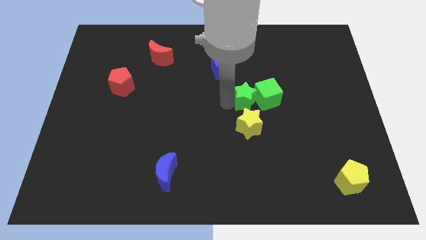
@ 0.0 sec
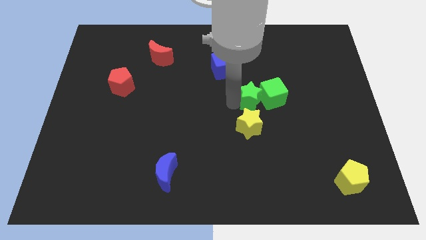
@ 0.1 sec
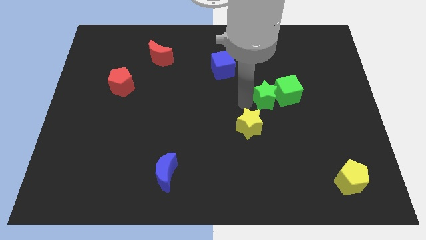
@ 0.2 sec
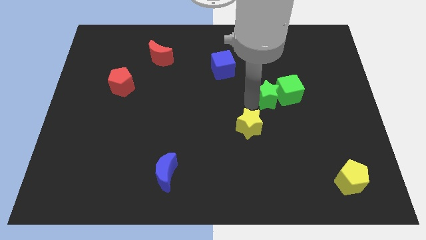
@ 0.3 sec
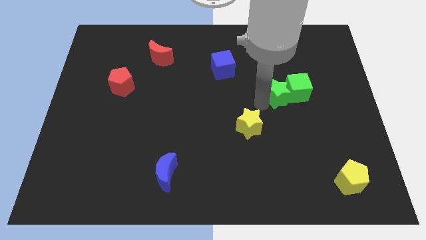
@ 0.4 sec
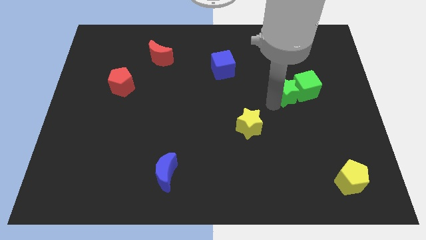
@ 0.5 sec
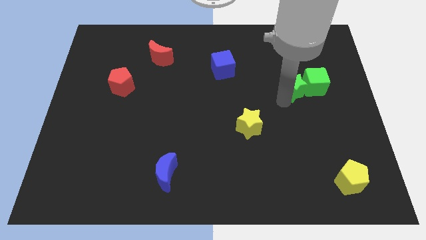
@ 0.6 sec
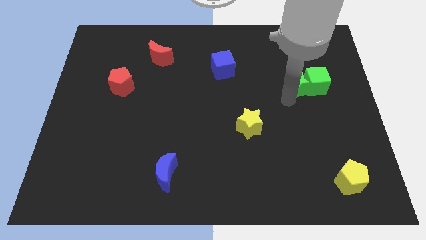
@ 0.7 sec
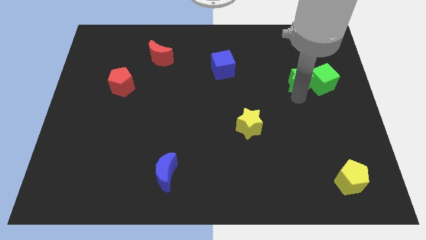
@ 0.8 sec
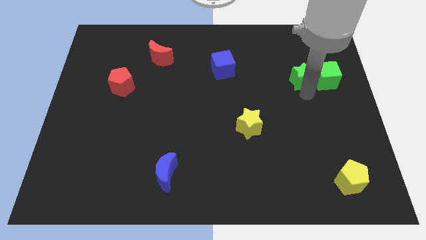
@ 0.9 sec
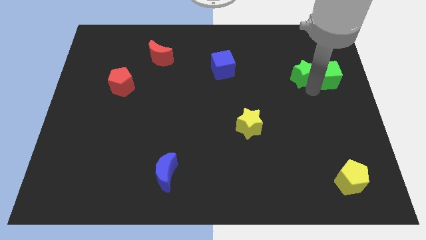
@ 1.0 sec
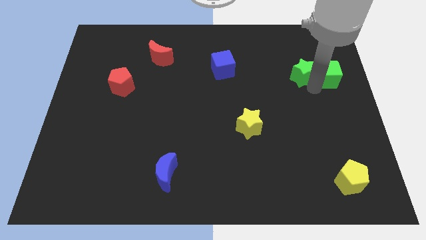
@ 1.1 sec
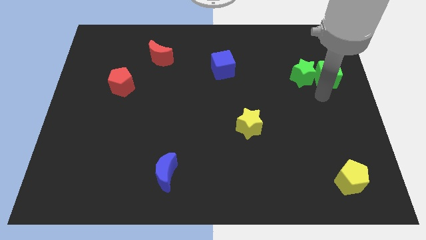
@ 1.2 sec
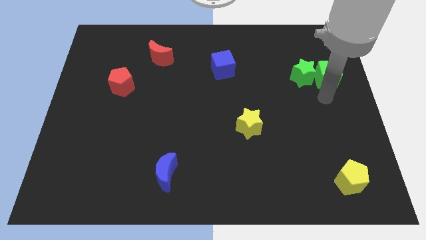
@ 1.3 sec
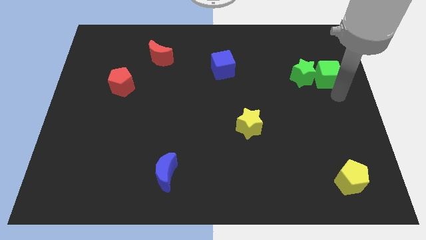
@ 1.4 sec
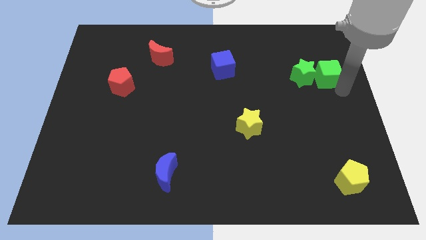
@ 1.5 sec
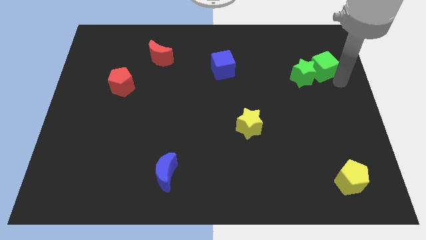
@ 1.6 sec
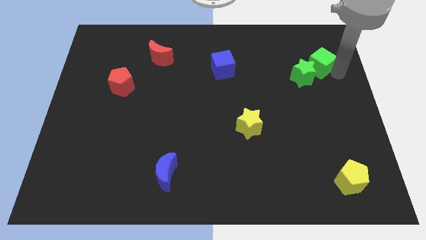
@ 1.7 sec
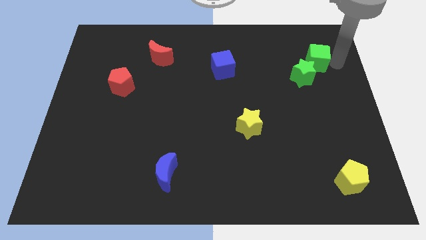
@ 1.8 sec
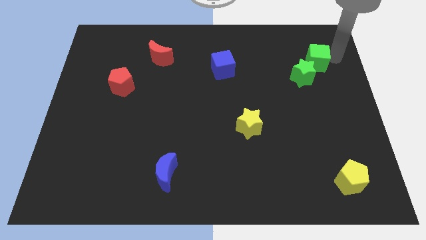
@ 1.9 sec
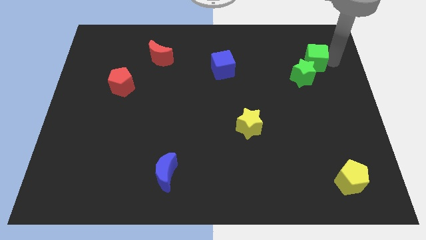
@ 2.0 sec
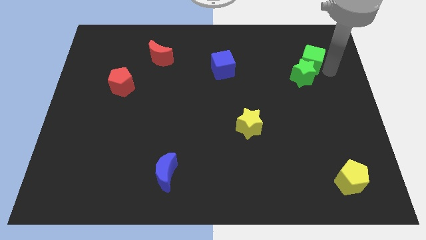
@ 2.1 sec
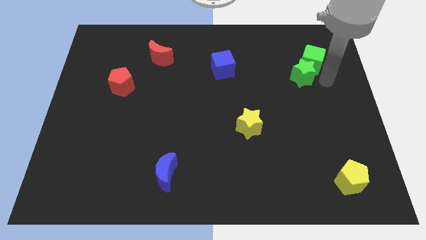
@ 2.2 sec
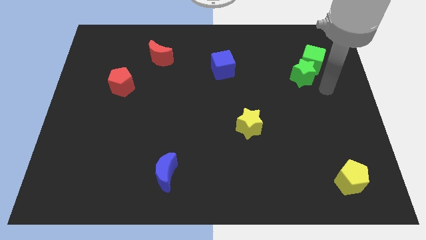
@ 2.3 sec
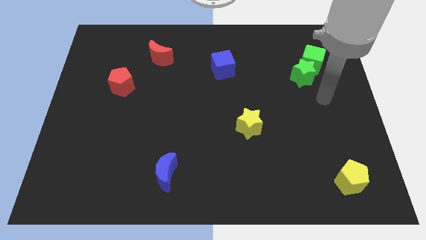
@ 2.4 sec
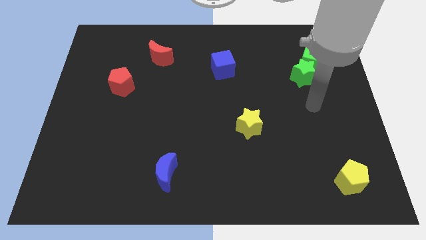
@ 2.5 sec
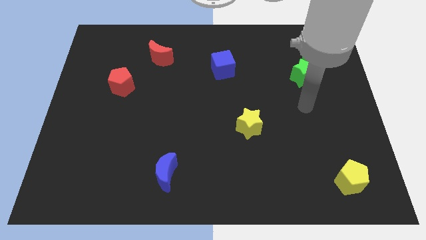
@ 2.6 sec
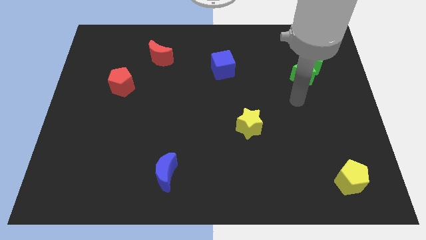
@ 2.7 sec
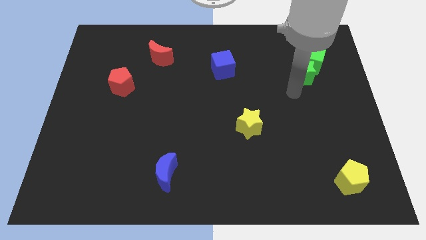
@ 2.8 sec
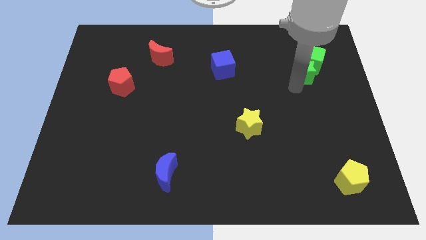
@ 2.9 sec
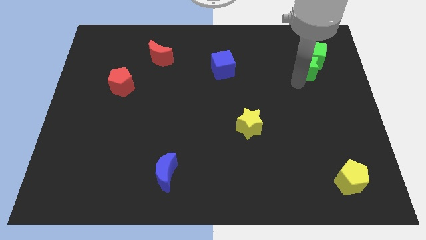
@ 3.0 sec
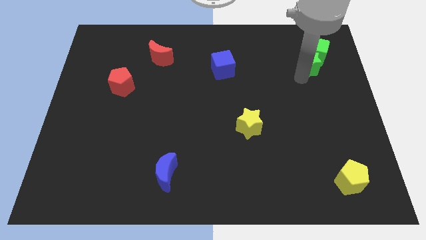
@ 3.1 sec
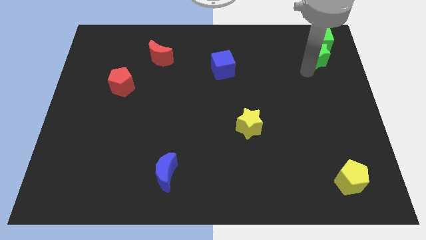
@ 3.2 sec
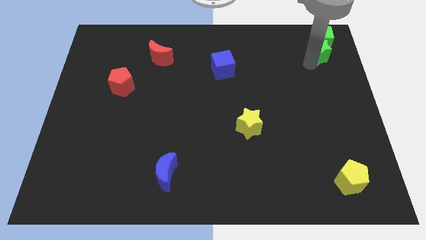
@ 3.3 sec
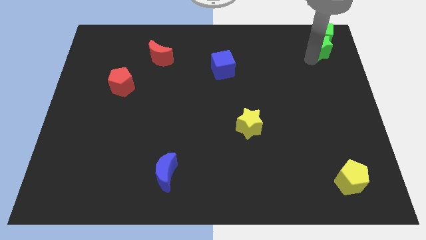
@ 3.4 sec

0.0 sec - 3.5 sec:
push the green star along with green cube to the top right of the board

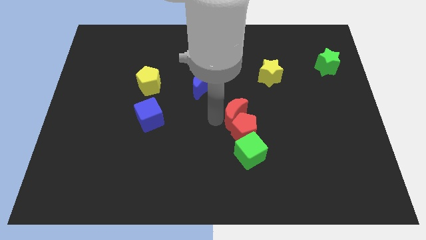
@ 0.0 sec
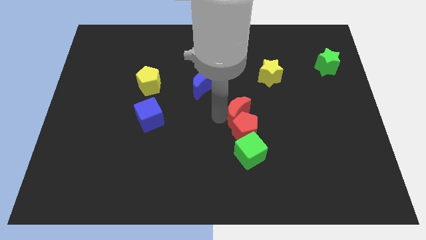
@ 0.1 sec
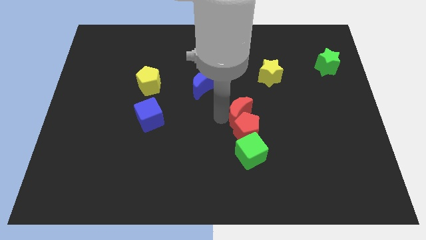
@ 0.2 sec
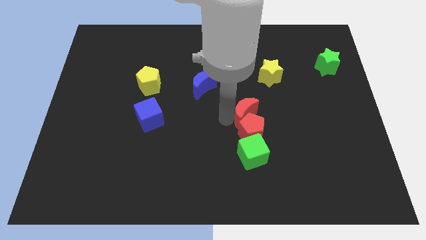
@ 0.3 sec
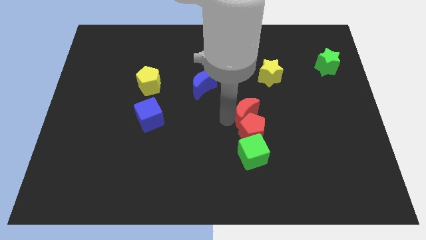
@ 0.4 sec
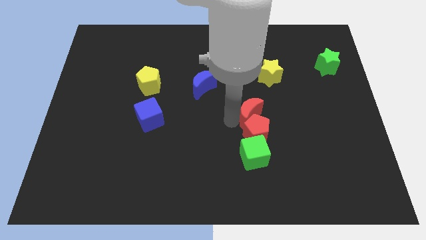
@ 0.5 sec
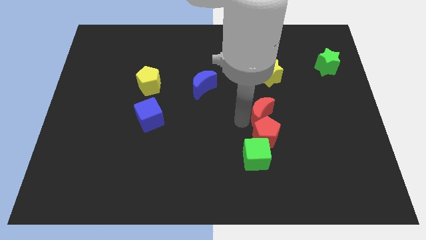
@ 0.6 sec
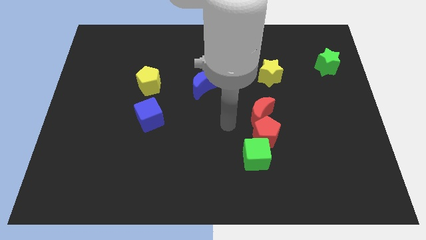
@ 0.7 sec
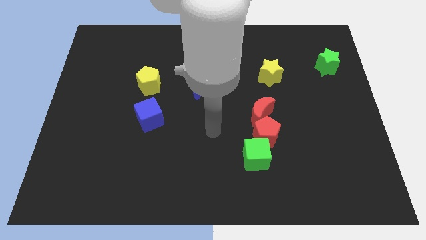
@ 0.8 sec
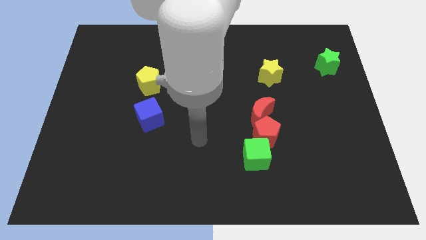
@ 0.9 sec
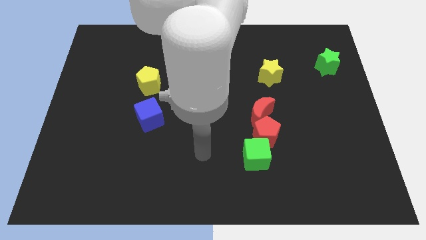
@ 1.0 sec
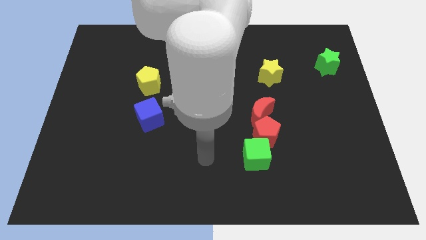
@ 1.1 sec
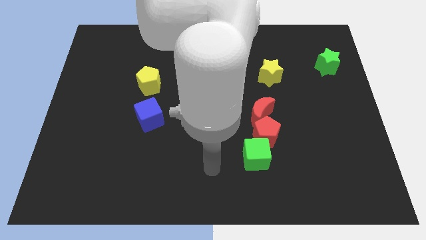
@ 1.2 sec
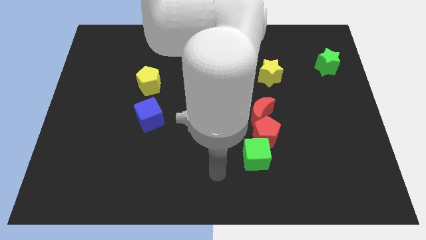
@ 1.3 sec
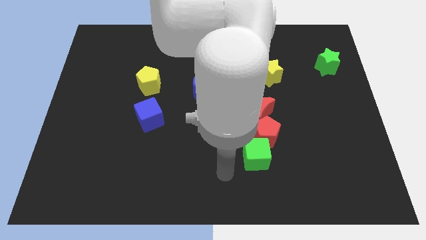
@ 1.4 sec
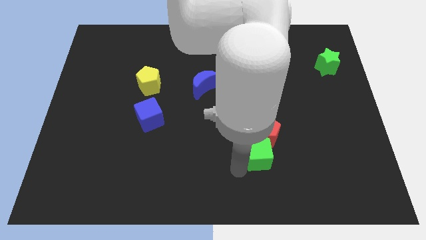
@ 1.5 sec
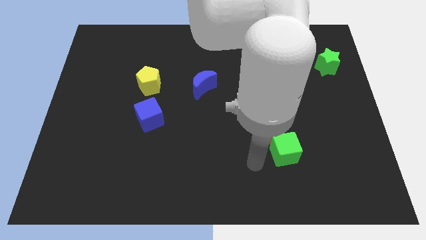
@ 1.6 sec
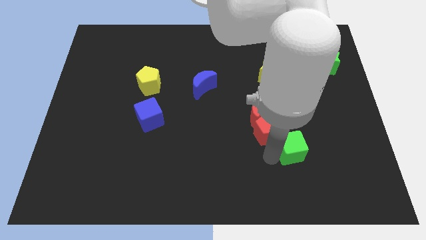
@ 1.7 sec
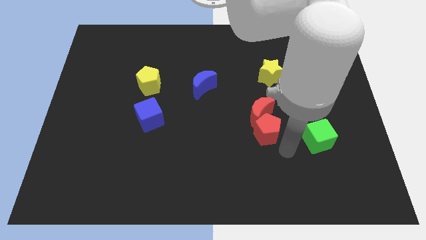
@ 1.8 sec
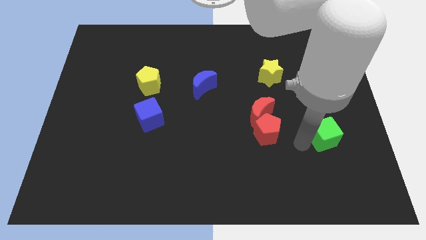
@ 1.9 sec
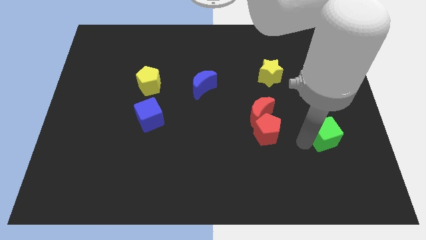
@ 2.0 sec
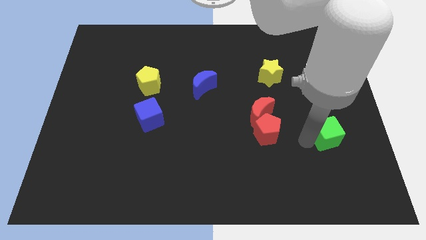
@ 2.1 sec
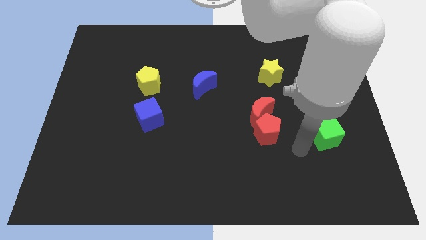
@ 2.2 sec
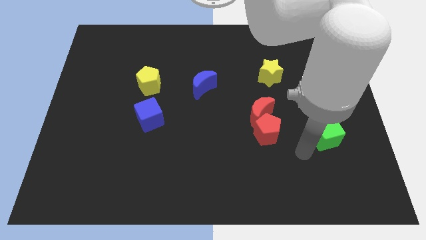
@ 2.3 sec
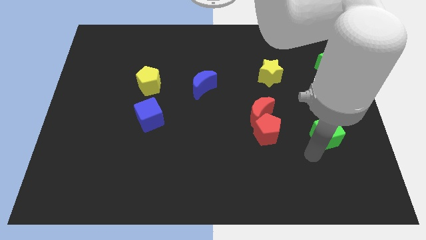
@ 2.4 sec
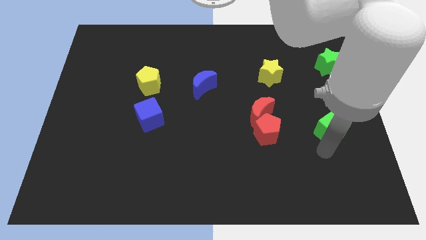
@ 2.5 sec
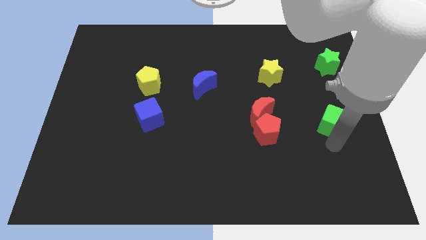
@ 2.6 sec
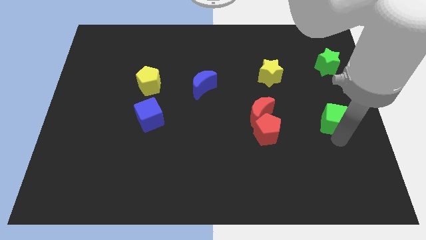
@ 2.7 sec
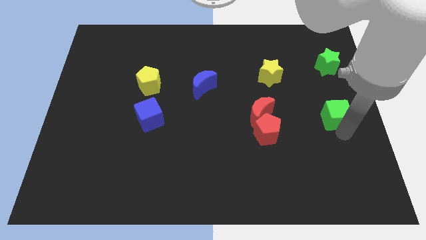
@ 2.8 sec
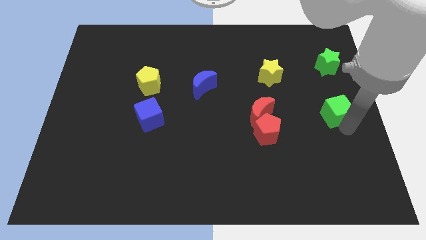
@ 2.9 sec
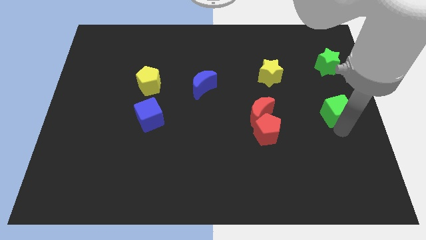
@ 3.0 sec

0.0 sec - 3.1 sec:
move the green cube below the green star

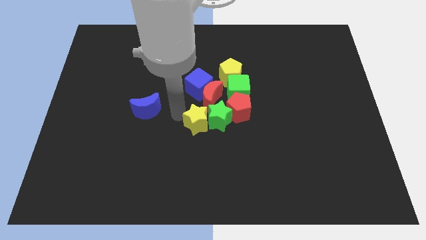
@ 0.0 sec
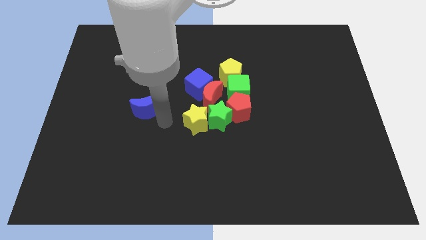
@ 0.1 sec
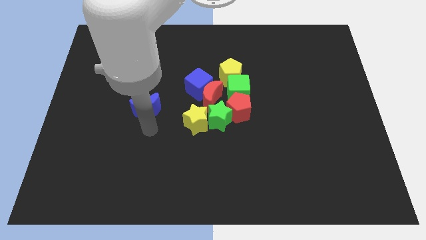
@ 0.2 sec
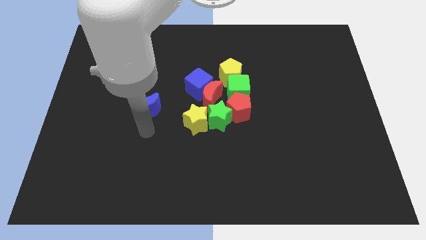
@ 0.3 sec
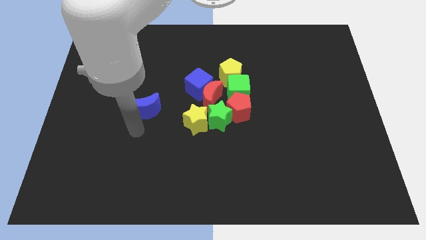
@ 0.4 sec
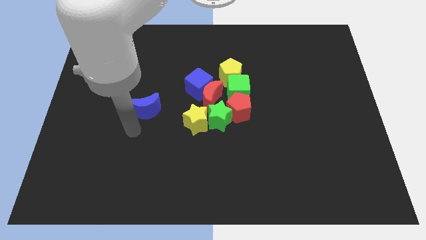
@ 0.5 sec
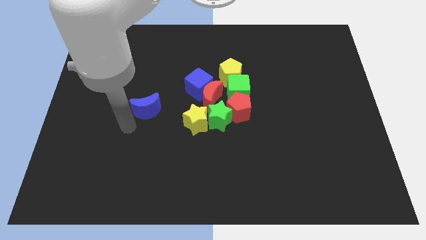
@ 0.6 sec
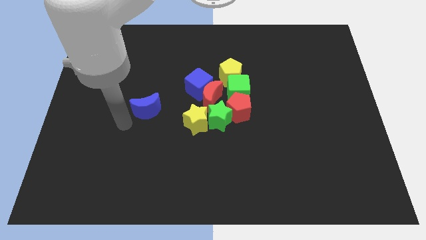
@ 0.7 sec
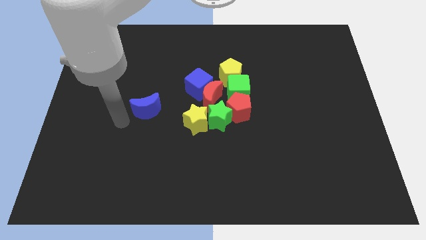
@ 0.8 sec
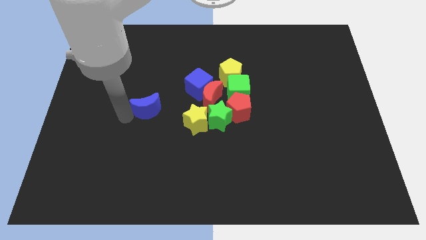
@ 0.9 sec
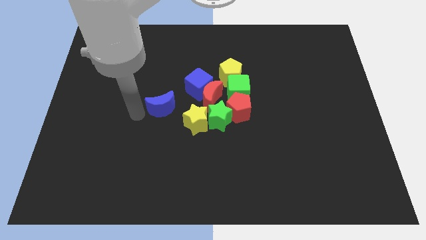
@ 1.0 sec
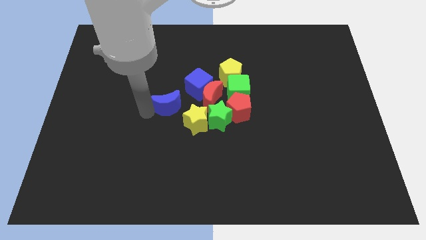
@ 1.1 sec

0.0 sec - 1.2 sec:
go near blue moon

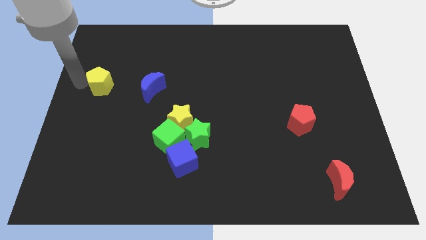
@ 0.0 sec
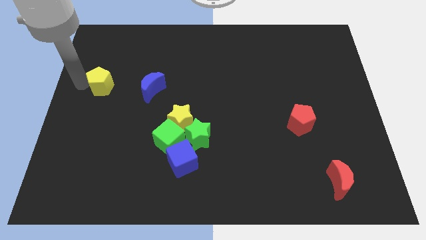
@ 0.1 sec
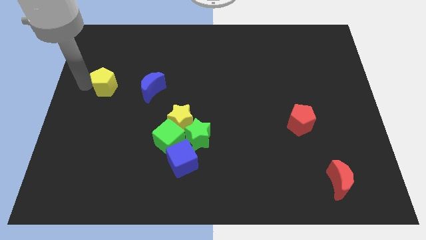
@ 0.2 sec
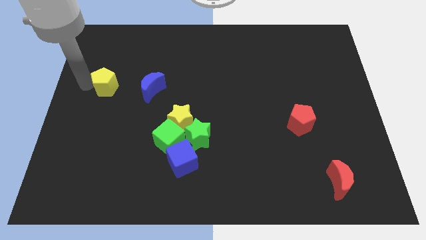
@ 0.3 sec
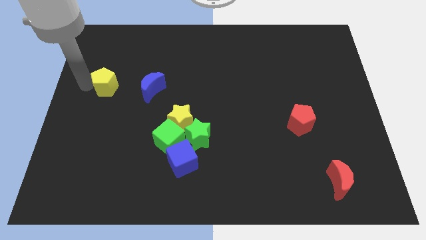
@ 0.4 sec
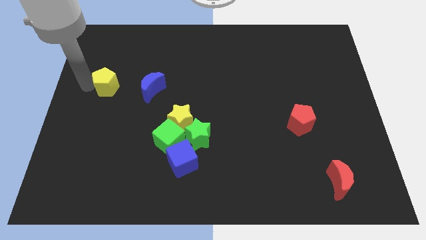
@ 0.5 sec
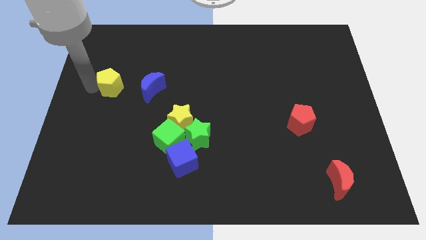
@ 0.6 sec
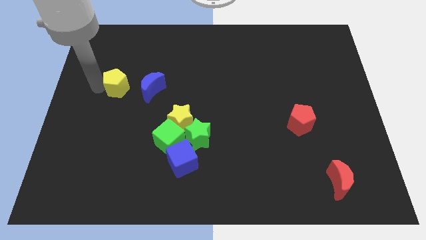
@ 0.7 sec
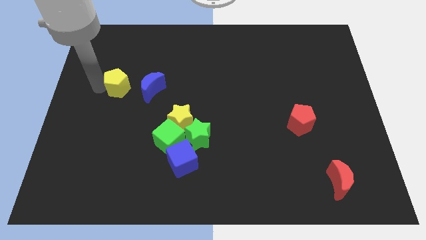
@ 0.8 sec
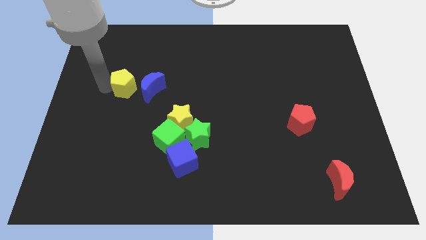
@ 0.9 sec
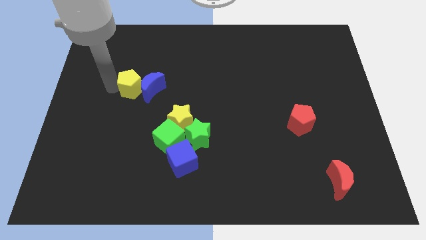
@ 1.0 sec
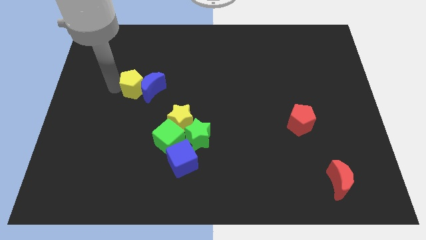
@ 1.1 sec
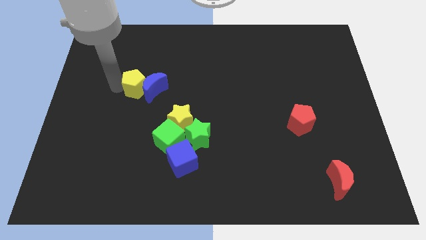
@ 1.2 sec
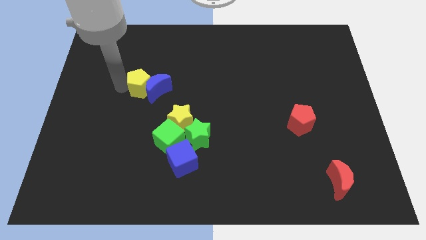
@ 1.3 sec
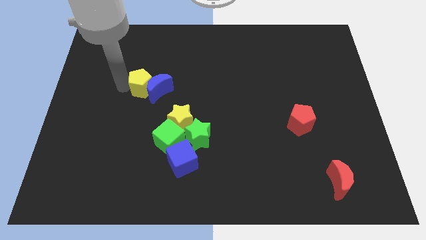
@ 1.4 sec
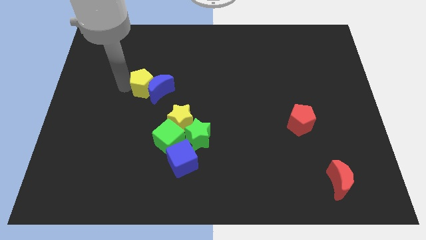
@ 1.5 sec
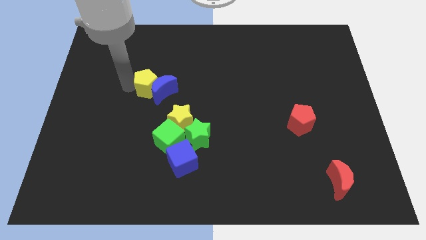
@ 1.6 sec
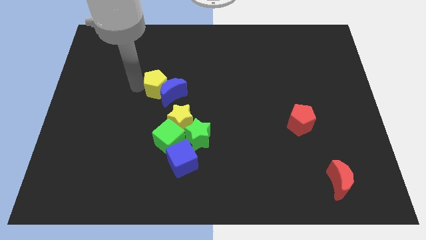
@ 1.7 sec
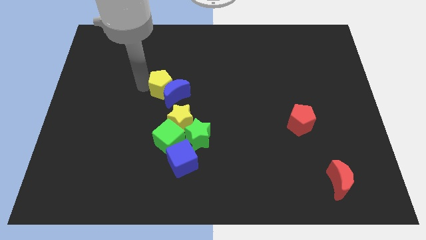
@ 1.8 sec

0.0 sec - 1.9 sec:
push the yellow pentagon into the blue crescent
